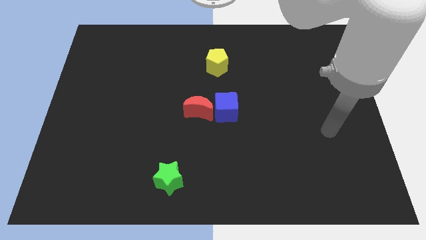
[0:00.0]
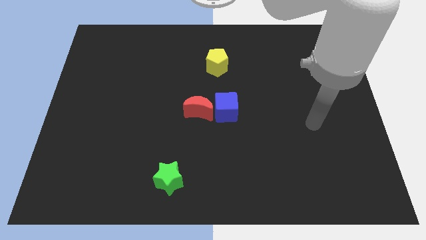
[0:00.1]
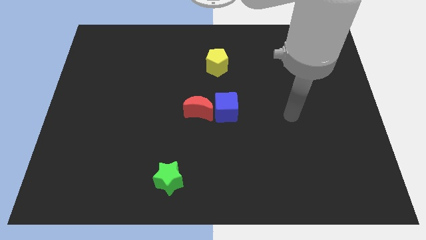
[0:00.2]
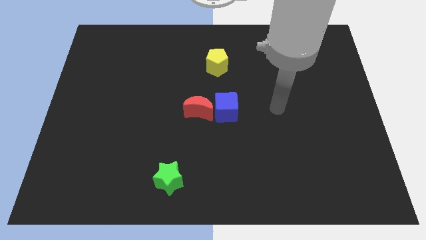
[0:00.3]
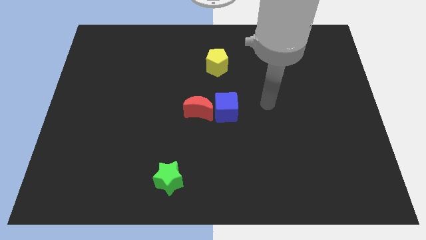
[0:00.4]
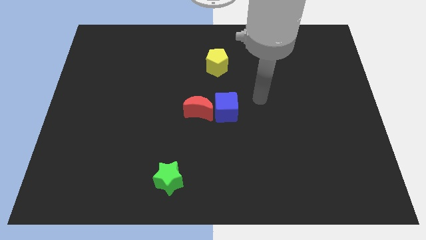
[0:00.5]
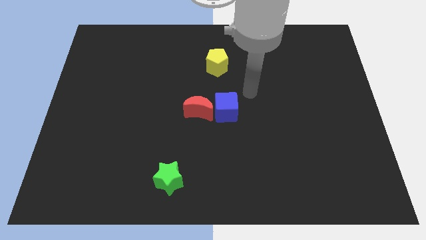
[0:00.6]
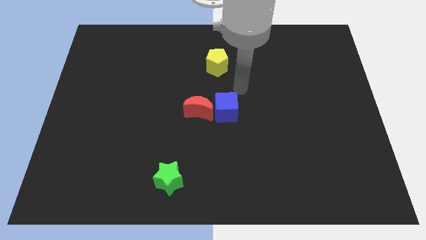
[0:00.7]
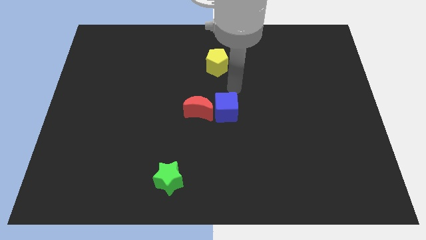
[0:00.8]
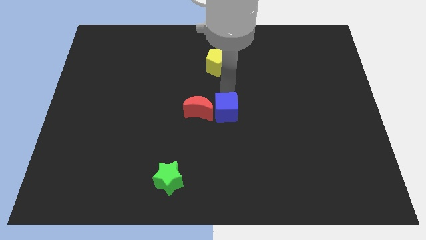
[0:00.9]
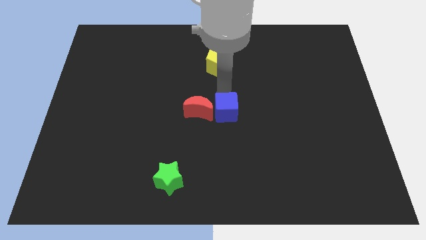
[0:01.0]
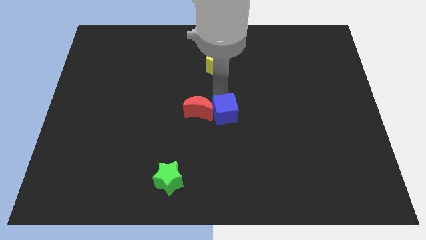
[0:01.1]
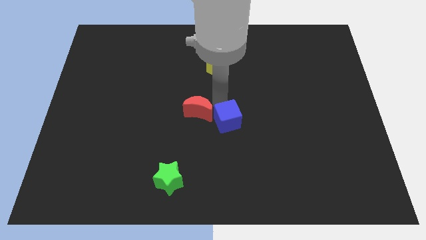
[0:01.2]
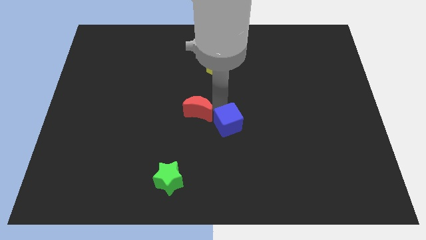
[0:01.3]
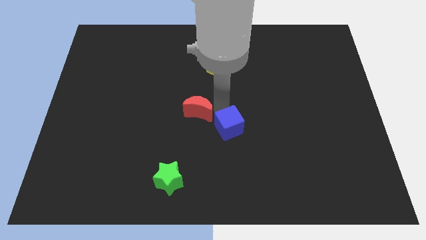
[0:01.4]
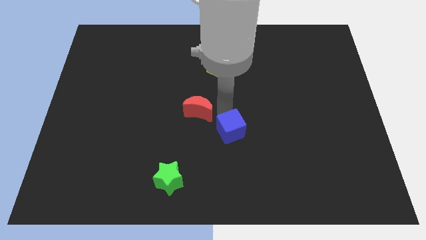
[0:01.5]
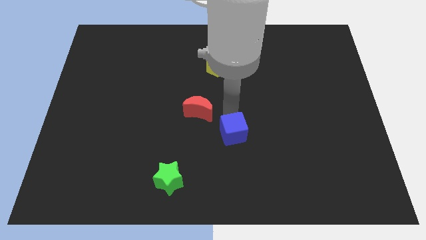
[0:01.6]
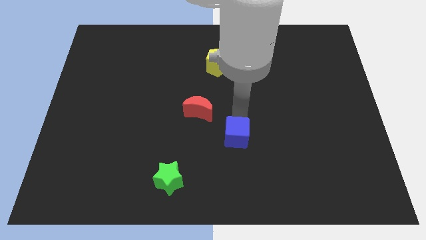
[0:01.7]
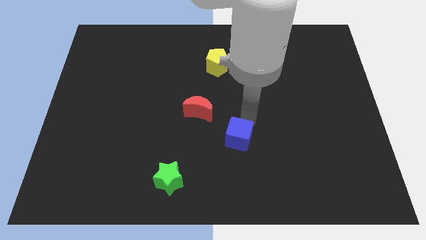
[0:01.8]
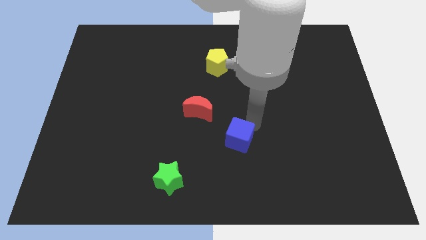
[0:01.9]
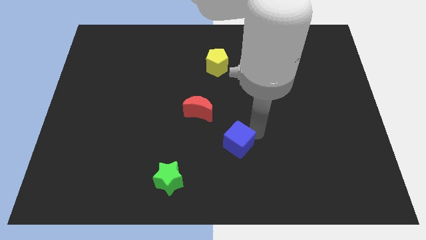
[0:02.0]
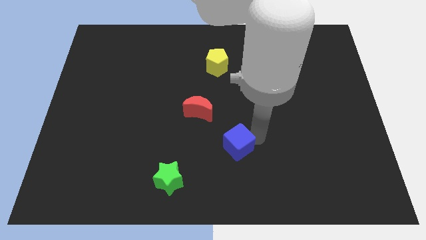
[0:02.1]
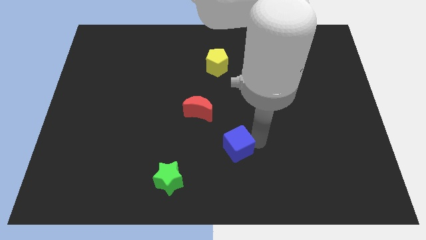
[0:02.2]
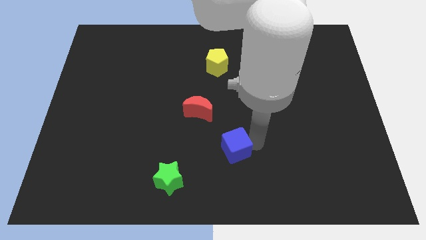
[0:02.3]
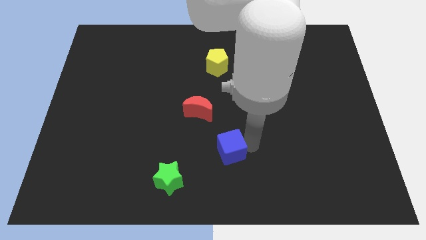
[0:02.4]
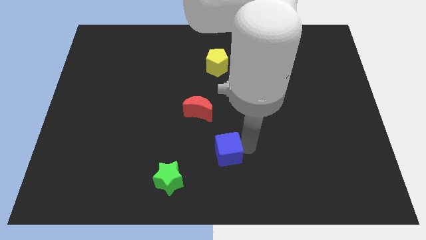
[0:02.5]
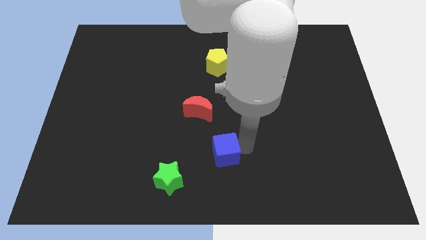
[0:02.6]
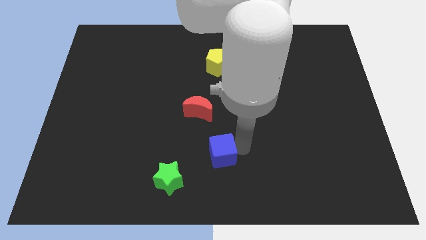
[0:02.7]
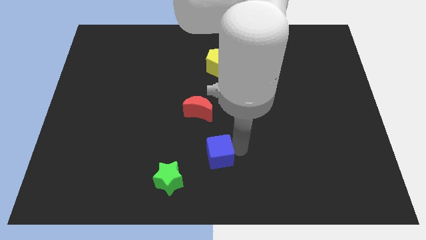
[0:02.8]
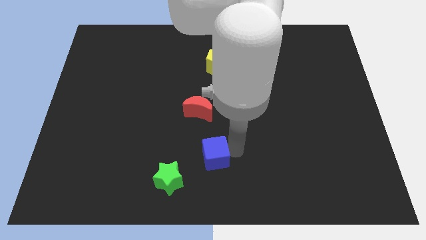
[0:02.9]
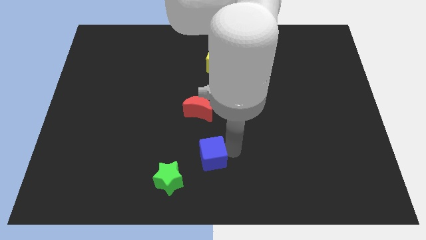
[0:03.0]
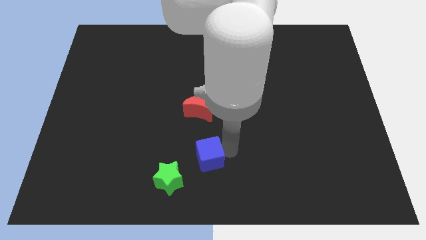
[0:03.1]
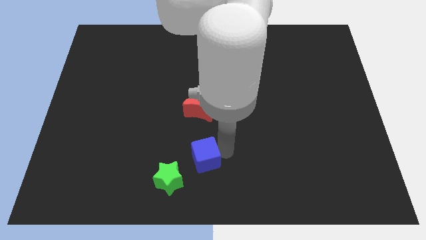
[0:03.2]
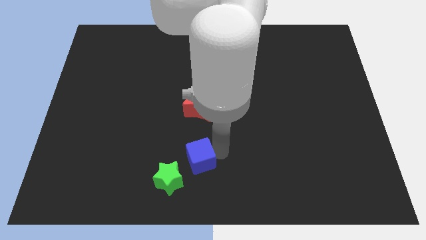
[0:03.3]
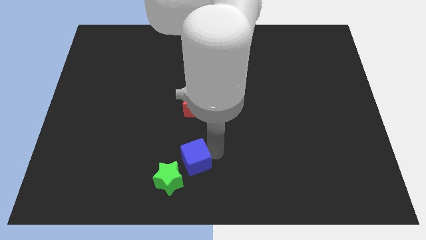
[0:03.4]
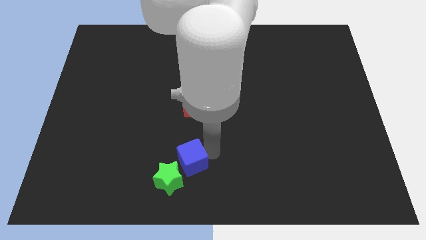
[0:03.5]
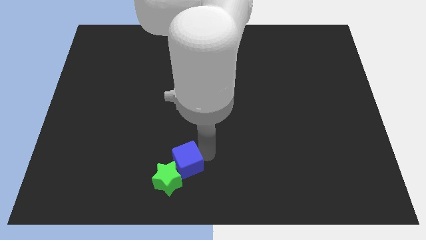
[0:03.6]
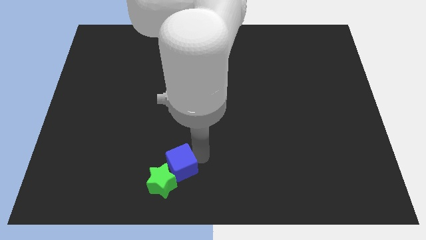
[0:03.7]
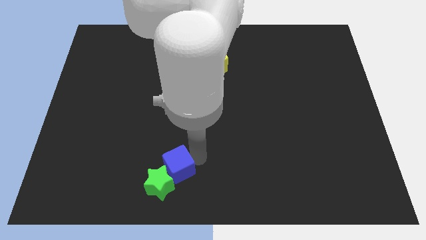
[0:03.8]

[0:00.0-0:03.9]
push the cube next to the green star

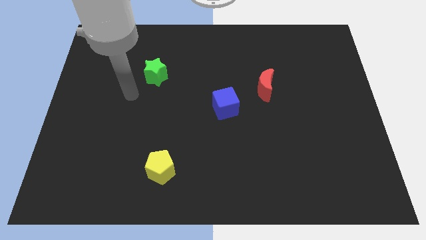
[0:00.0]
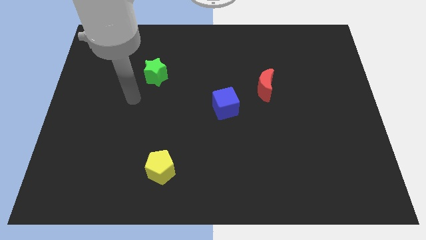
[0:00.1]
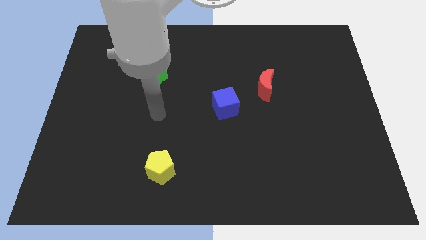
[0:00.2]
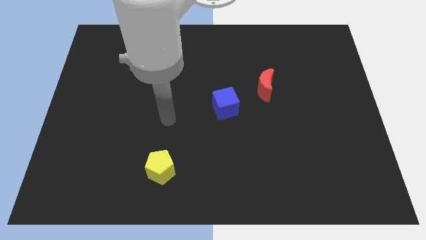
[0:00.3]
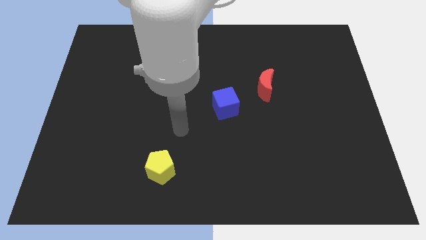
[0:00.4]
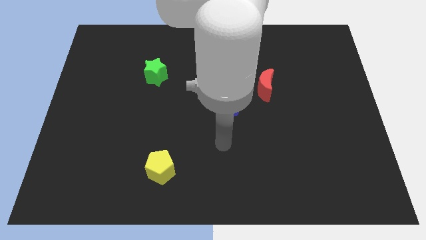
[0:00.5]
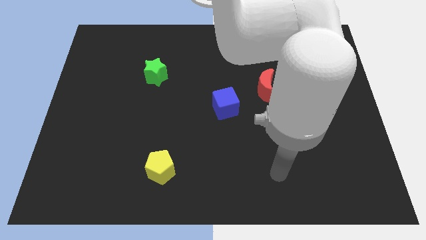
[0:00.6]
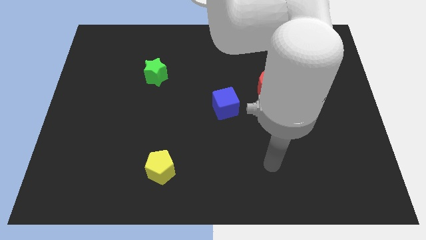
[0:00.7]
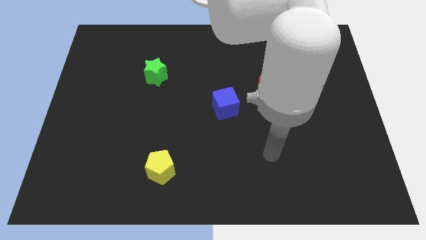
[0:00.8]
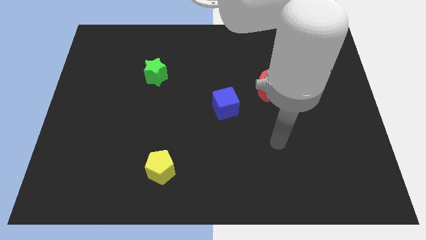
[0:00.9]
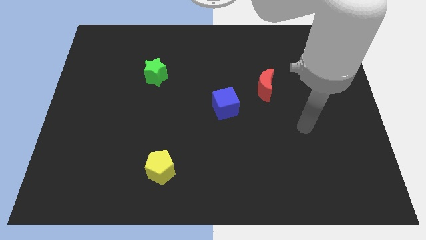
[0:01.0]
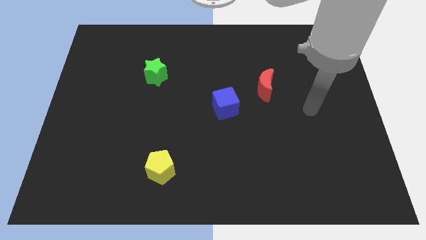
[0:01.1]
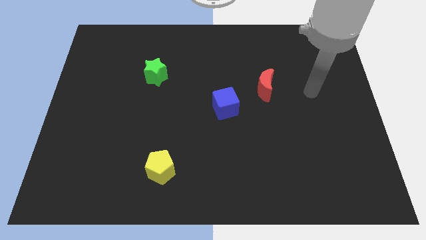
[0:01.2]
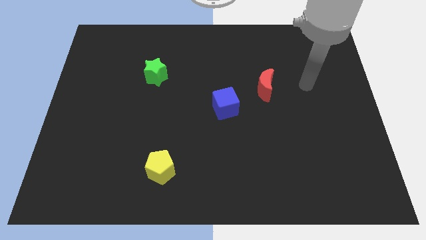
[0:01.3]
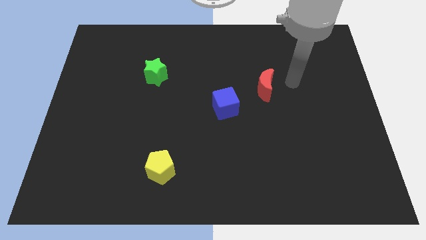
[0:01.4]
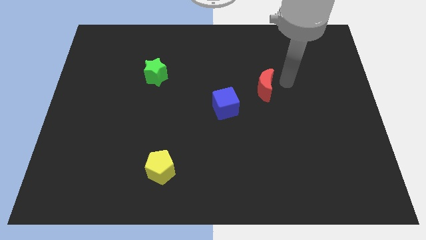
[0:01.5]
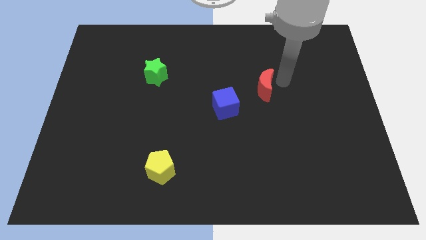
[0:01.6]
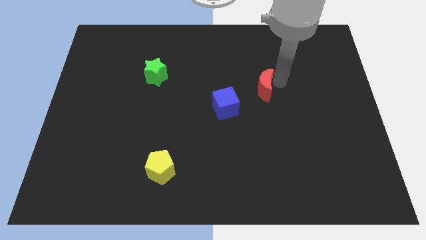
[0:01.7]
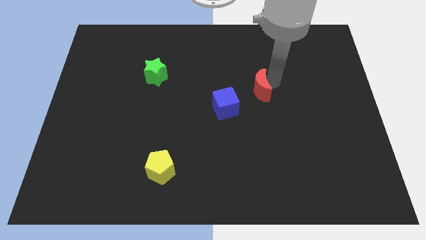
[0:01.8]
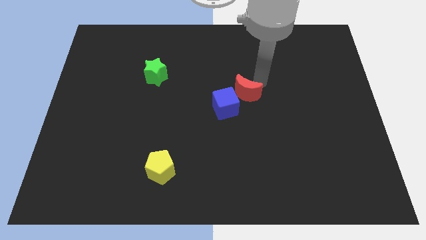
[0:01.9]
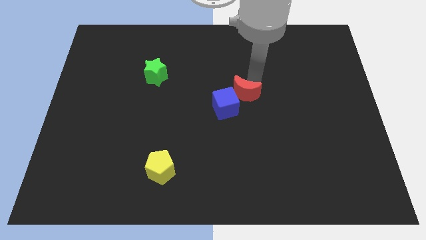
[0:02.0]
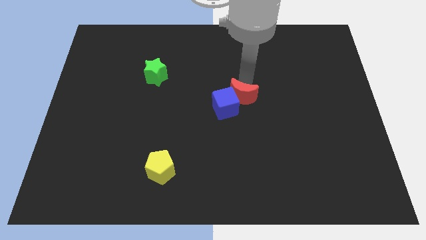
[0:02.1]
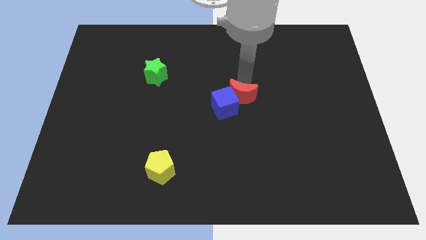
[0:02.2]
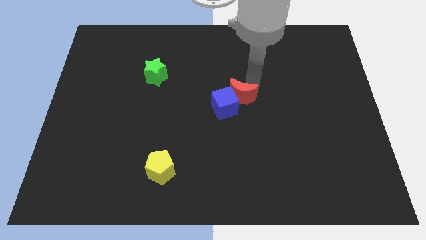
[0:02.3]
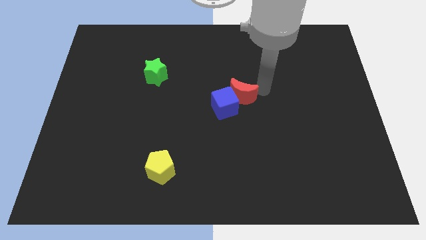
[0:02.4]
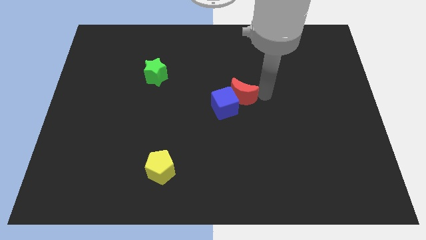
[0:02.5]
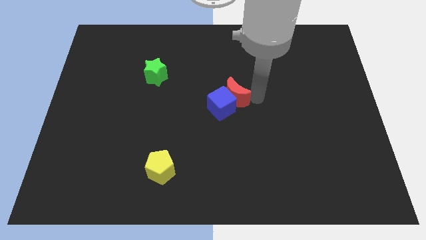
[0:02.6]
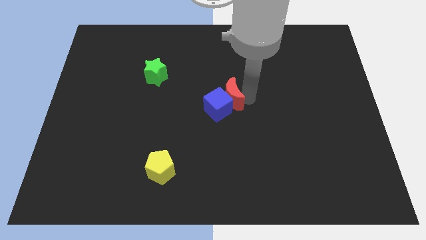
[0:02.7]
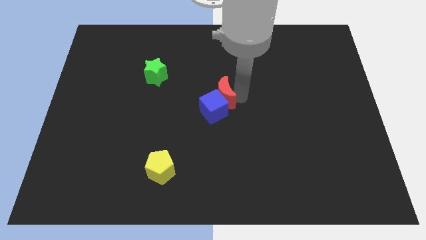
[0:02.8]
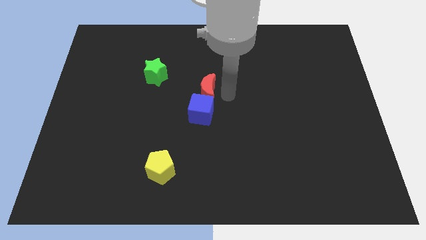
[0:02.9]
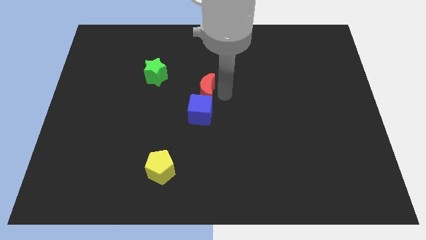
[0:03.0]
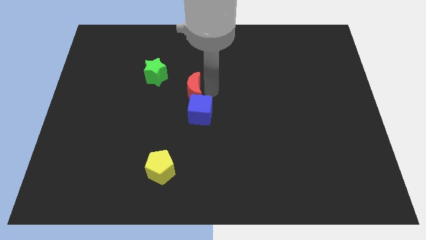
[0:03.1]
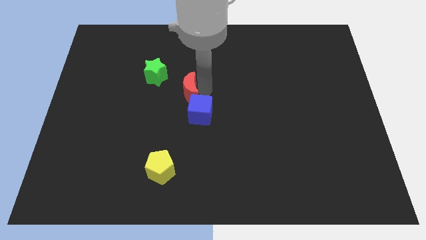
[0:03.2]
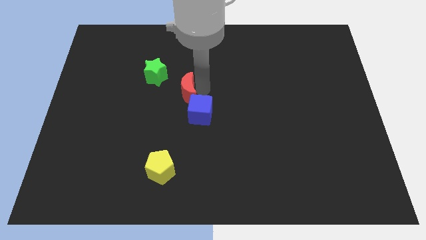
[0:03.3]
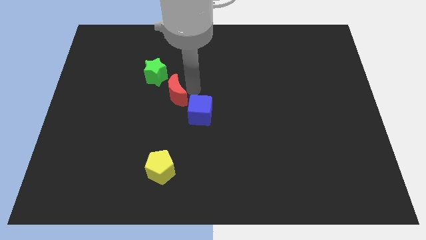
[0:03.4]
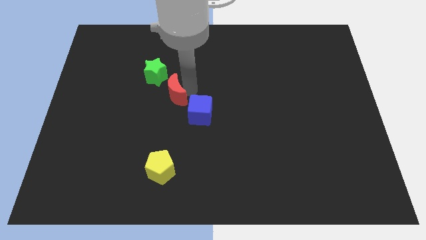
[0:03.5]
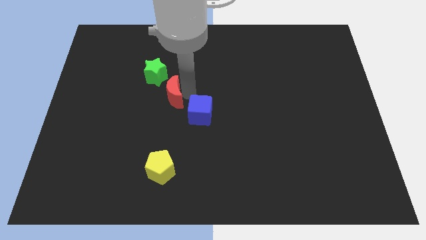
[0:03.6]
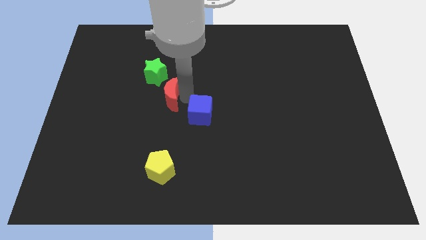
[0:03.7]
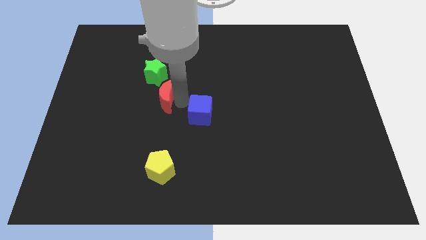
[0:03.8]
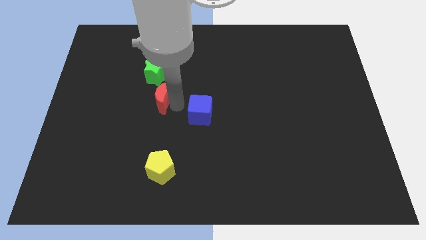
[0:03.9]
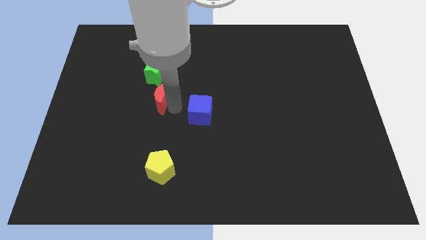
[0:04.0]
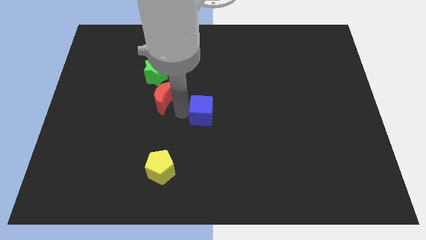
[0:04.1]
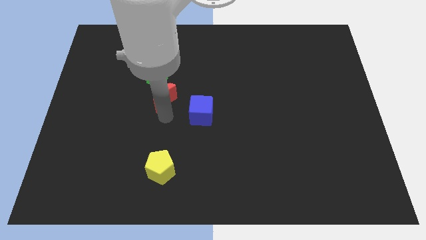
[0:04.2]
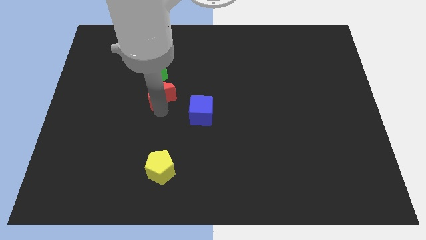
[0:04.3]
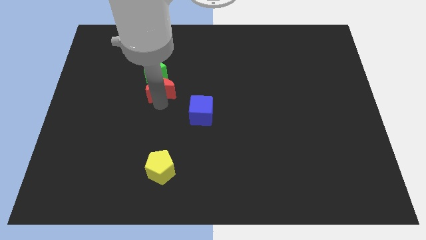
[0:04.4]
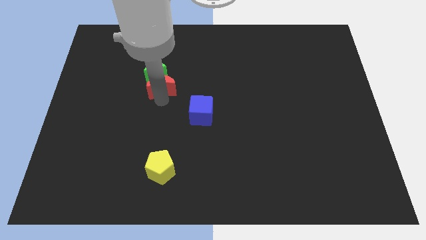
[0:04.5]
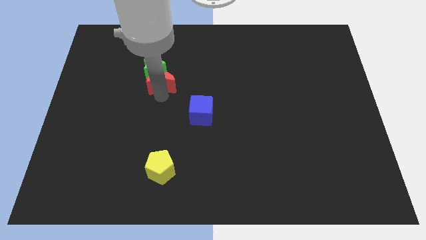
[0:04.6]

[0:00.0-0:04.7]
put the moon to the star
